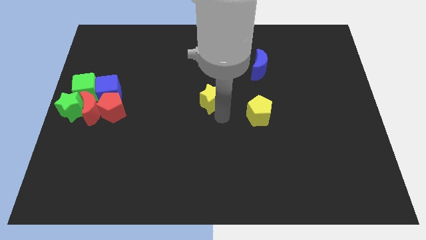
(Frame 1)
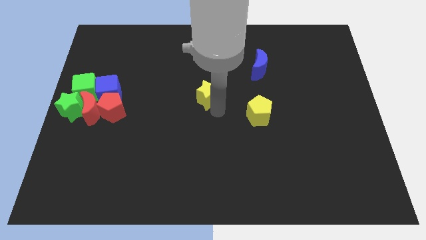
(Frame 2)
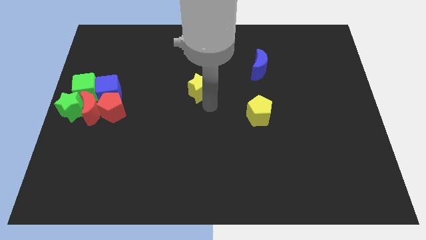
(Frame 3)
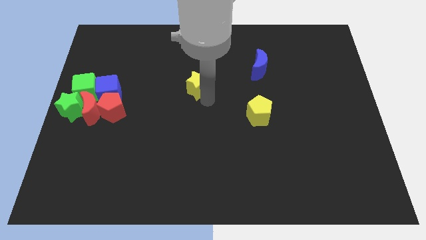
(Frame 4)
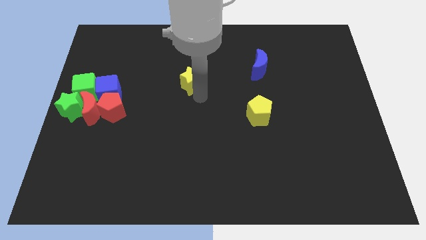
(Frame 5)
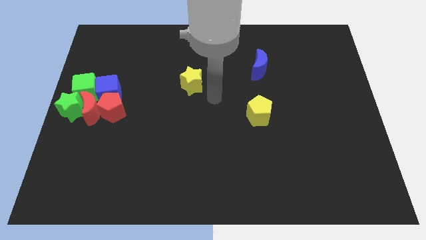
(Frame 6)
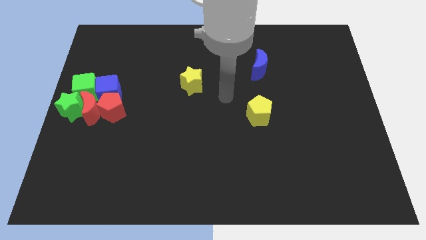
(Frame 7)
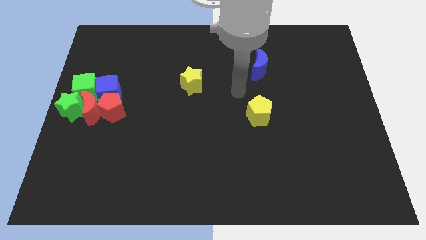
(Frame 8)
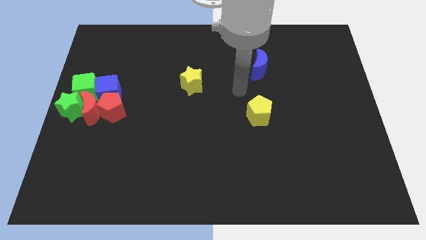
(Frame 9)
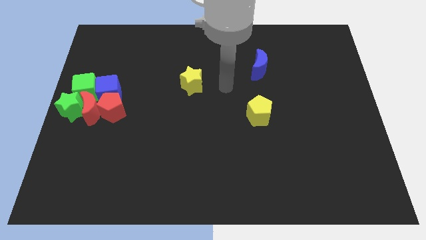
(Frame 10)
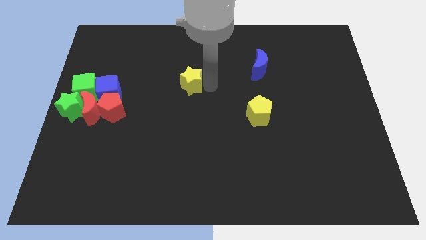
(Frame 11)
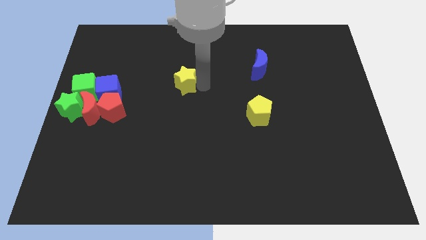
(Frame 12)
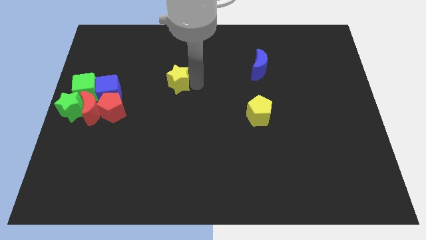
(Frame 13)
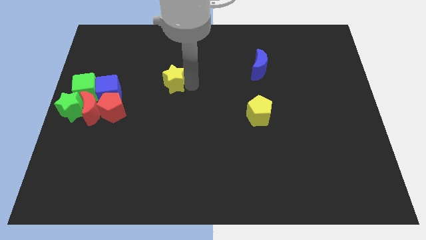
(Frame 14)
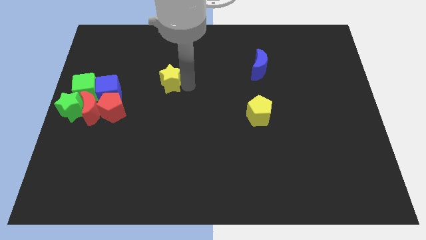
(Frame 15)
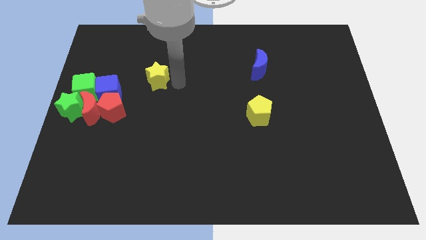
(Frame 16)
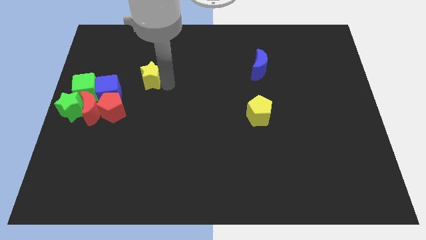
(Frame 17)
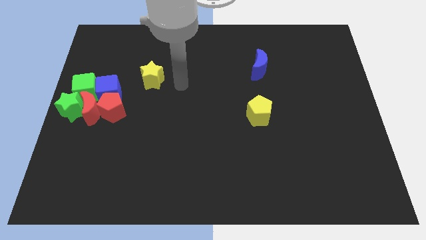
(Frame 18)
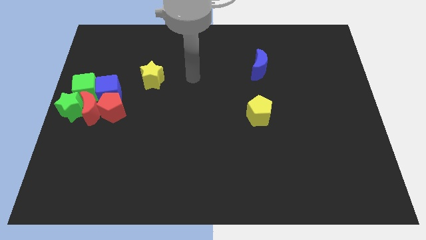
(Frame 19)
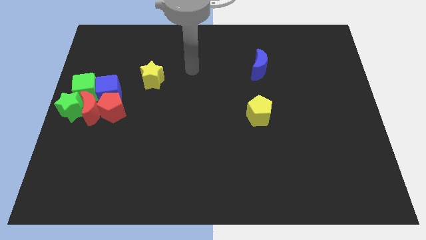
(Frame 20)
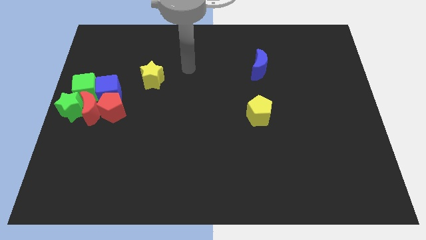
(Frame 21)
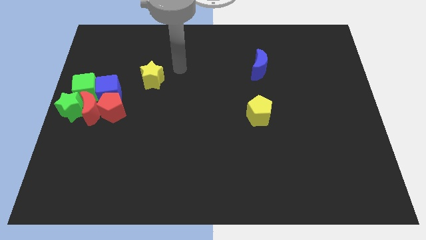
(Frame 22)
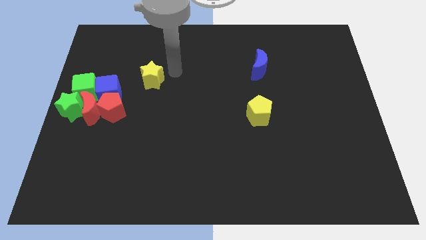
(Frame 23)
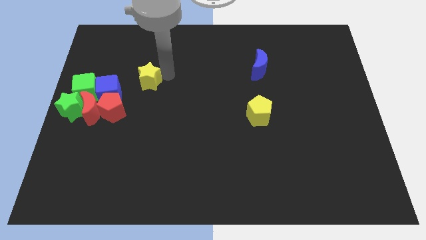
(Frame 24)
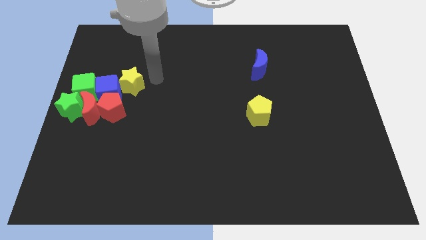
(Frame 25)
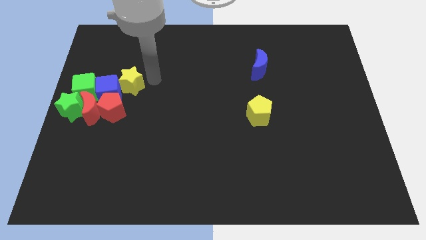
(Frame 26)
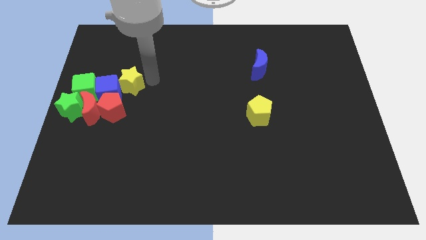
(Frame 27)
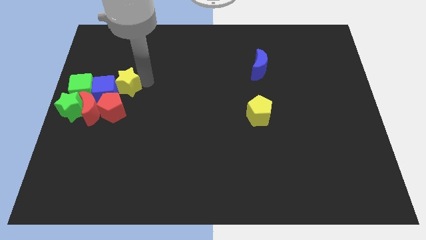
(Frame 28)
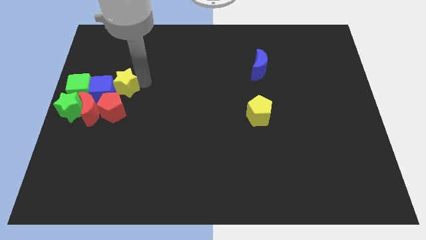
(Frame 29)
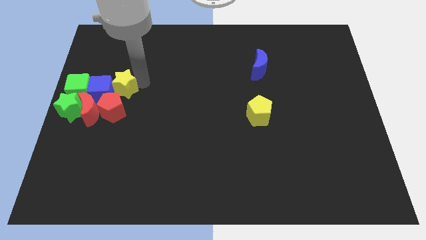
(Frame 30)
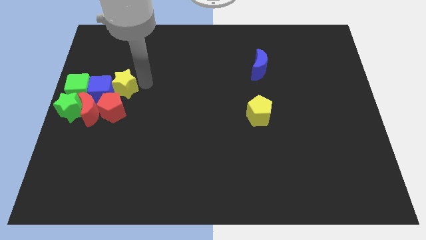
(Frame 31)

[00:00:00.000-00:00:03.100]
push the yellow star into the blue cube

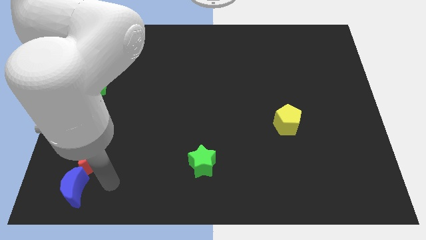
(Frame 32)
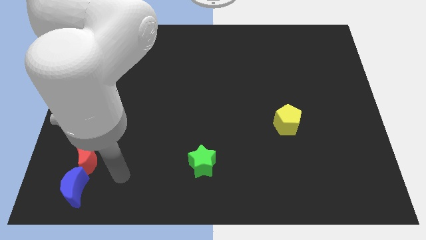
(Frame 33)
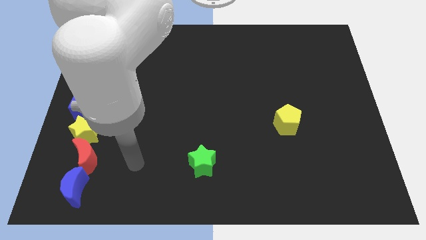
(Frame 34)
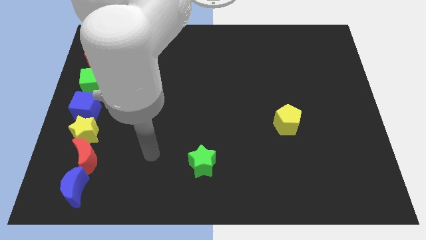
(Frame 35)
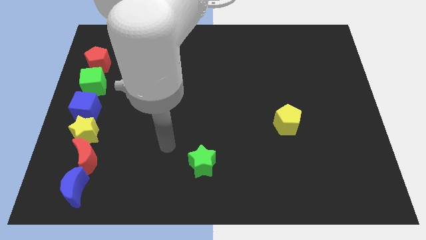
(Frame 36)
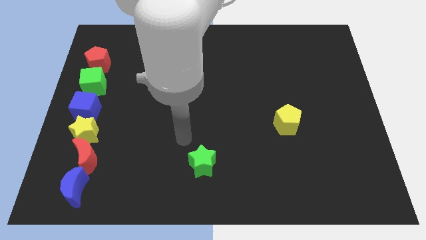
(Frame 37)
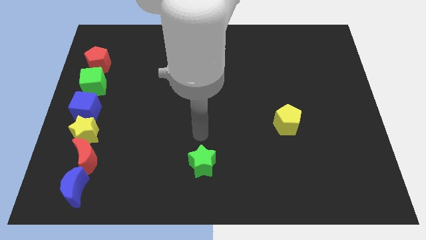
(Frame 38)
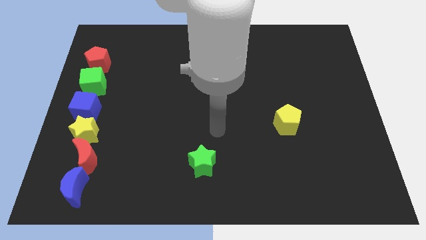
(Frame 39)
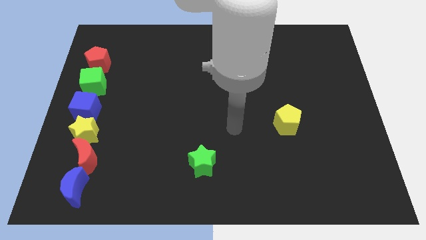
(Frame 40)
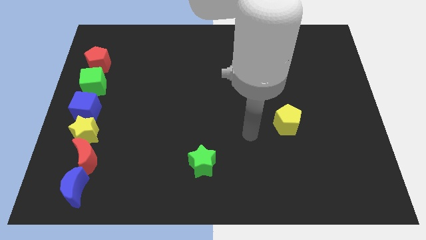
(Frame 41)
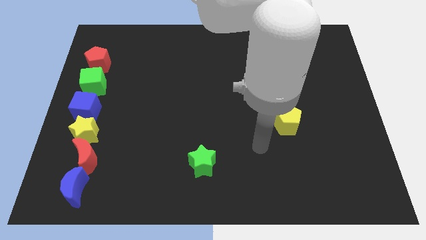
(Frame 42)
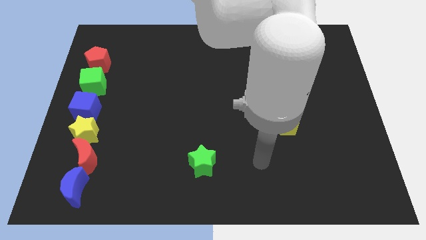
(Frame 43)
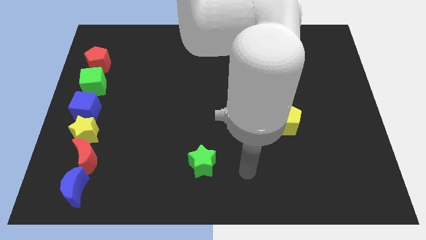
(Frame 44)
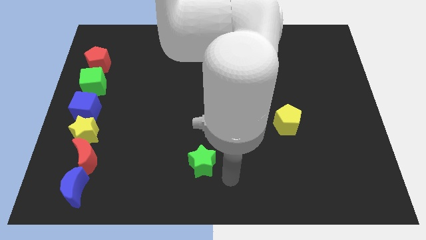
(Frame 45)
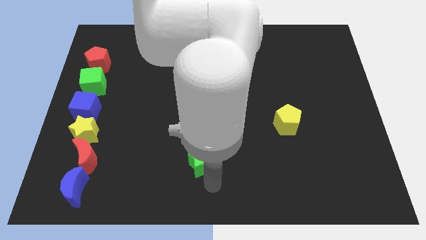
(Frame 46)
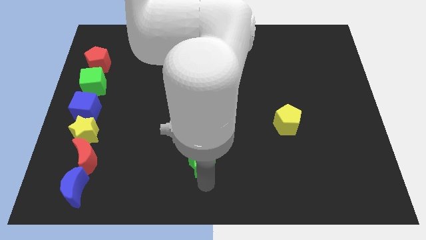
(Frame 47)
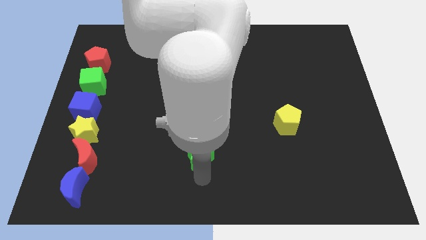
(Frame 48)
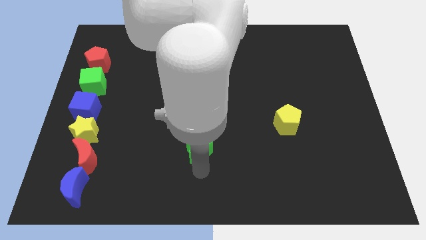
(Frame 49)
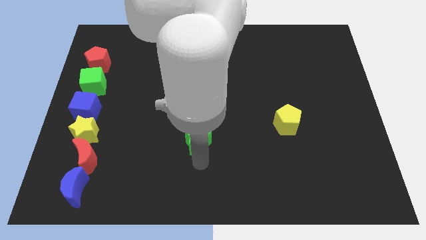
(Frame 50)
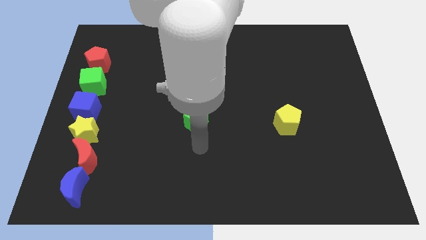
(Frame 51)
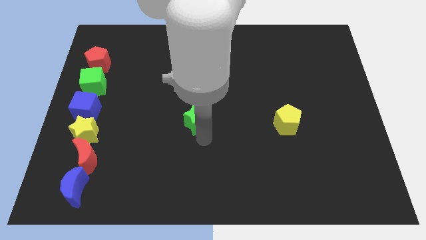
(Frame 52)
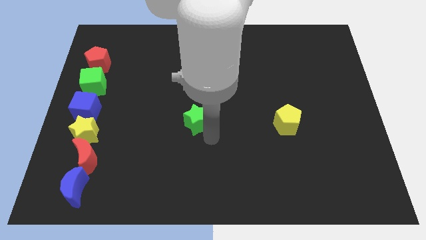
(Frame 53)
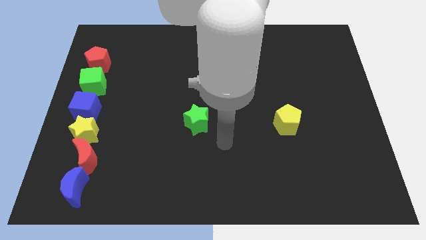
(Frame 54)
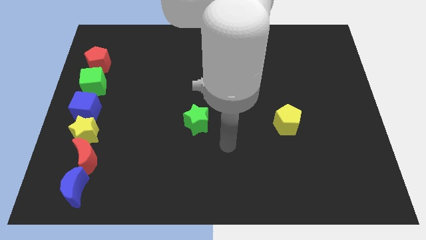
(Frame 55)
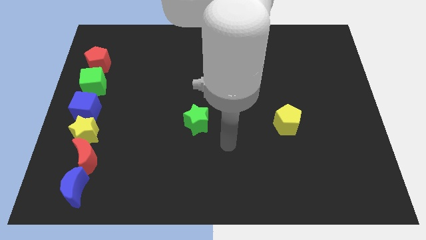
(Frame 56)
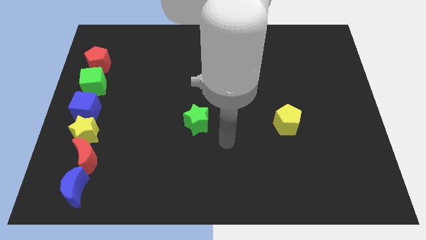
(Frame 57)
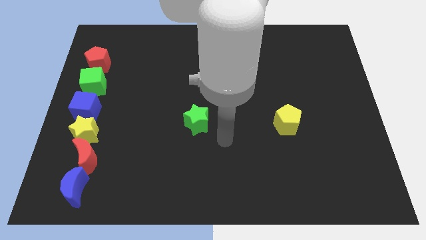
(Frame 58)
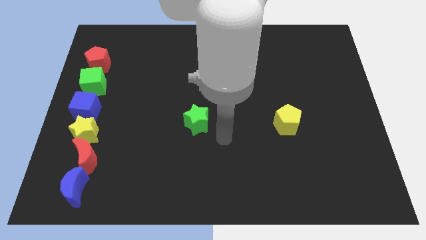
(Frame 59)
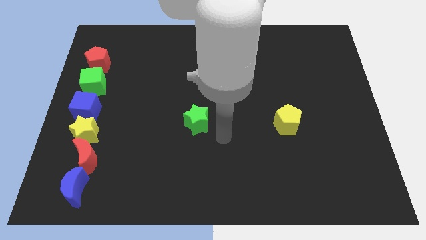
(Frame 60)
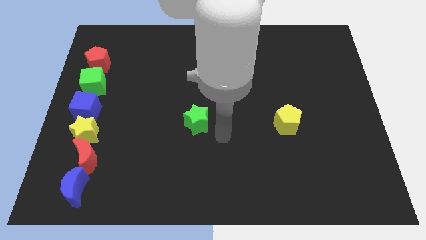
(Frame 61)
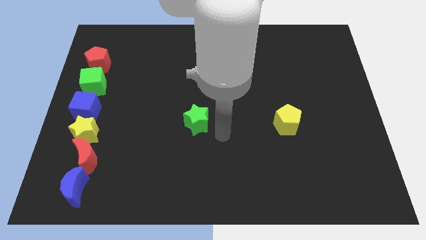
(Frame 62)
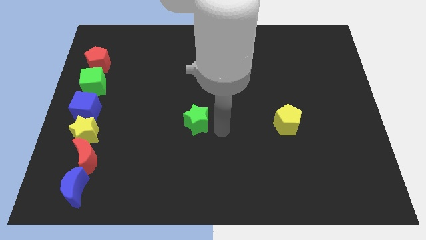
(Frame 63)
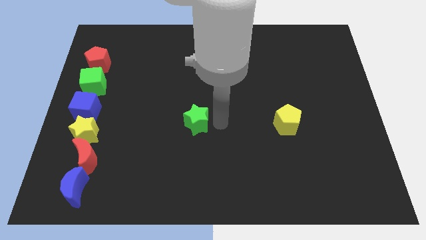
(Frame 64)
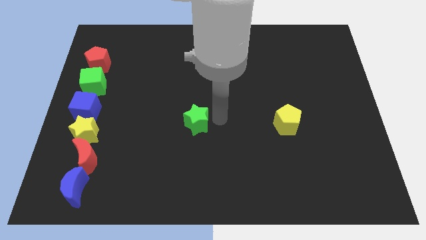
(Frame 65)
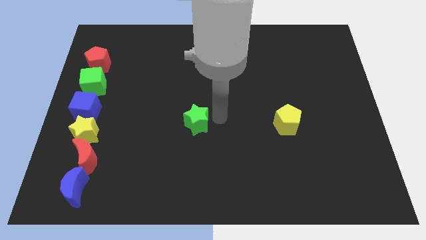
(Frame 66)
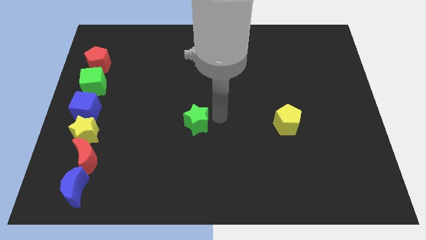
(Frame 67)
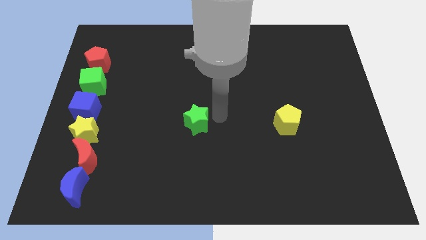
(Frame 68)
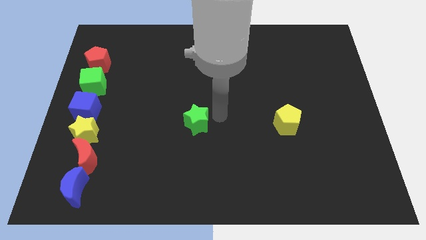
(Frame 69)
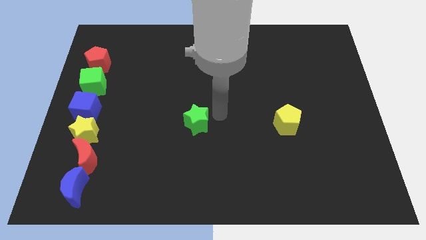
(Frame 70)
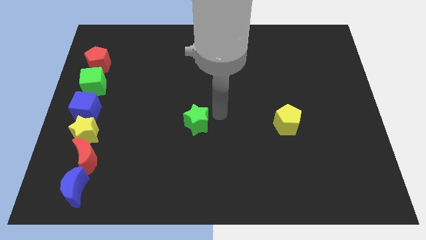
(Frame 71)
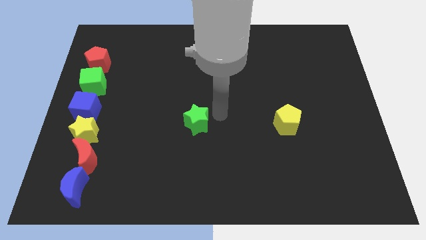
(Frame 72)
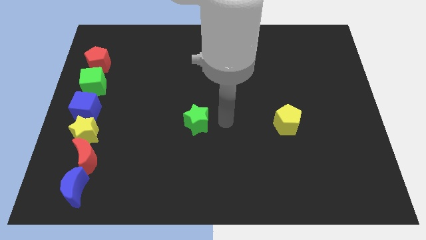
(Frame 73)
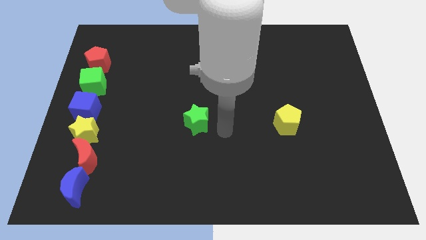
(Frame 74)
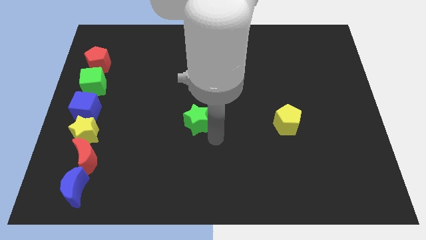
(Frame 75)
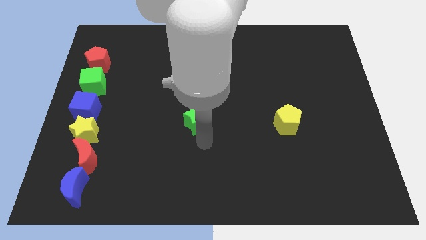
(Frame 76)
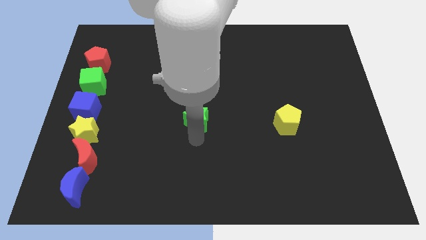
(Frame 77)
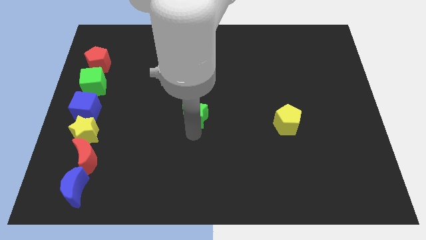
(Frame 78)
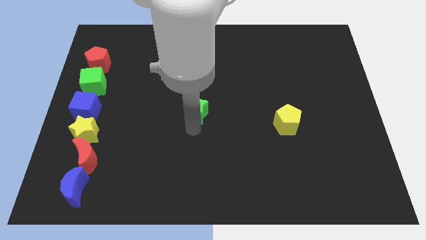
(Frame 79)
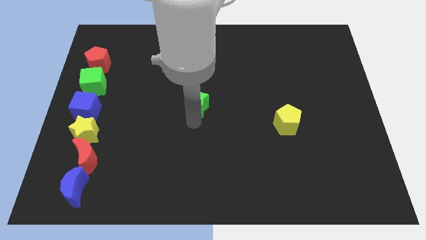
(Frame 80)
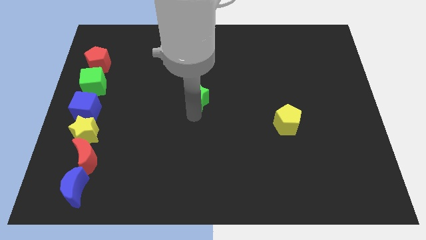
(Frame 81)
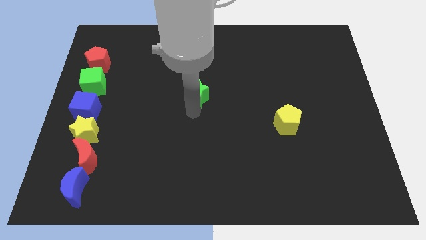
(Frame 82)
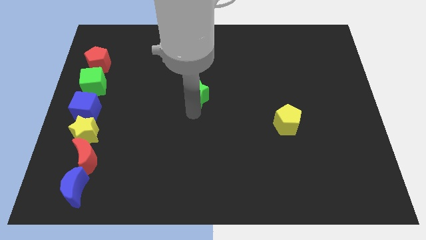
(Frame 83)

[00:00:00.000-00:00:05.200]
move the green star to the center of the board

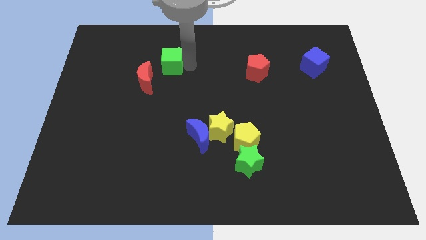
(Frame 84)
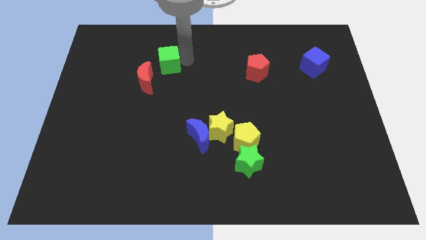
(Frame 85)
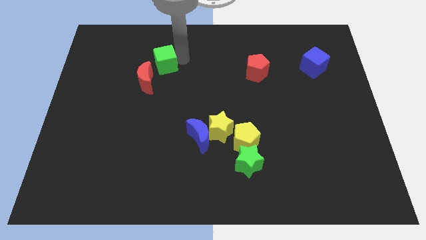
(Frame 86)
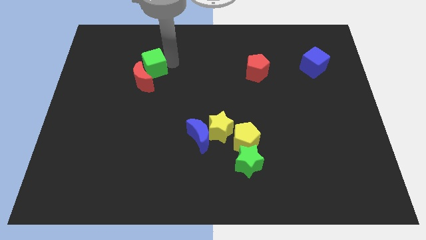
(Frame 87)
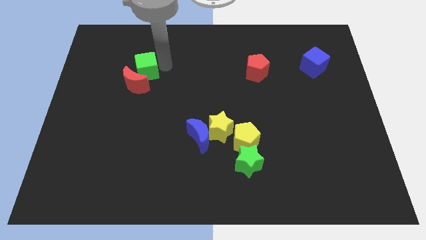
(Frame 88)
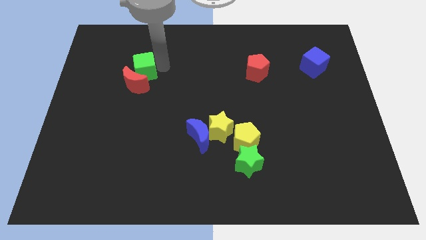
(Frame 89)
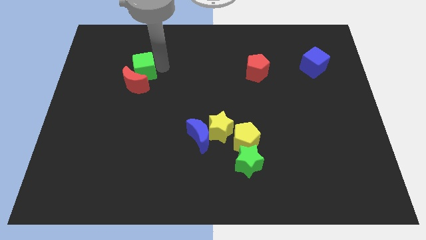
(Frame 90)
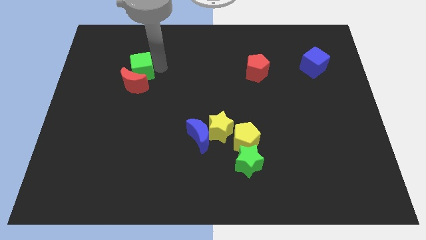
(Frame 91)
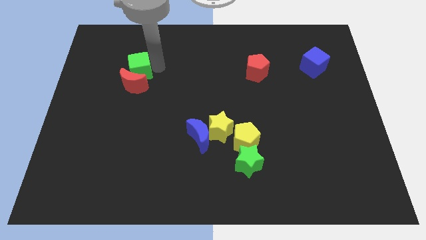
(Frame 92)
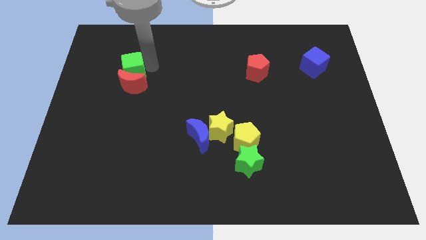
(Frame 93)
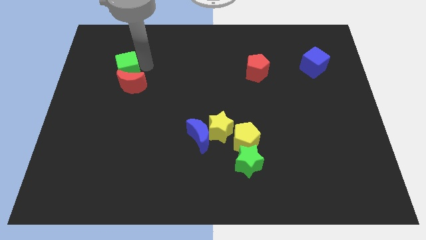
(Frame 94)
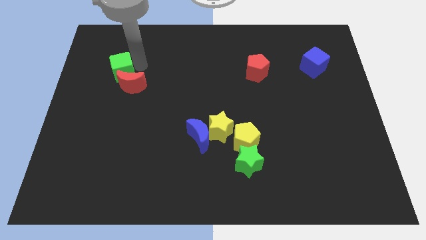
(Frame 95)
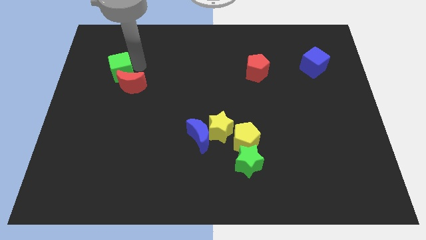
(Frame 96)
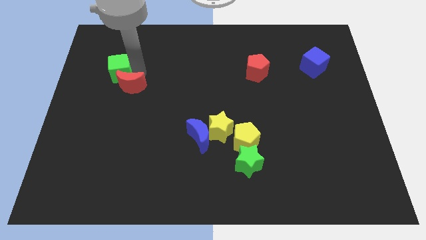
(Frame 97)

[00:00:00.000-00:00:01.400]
move the green cube above the red crescent
